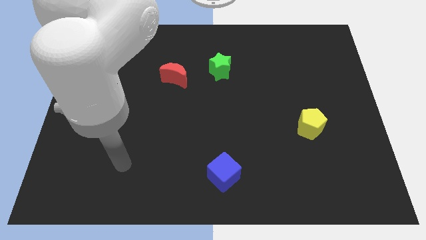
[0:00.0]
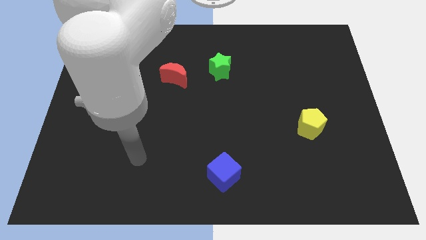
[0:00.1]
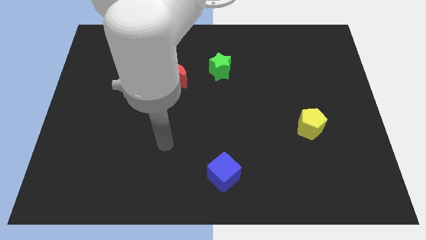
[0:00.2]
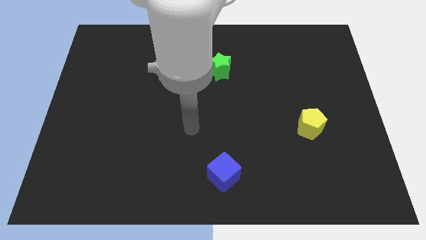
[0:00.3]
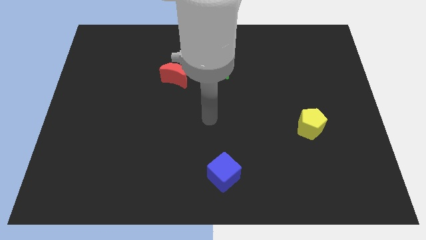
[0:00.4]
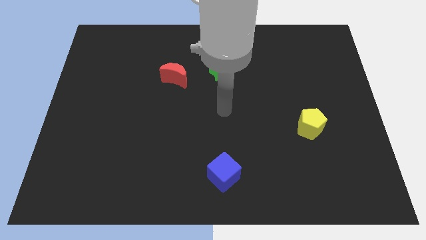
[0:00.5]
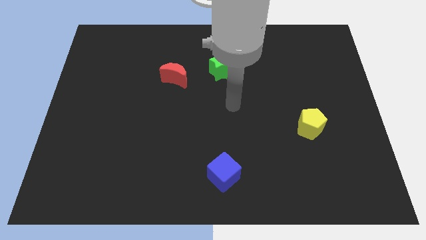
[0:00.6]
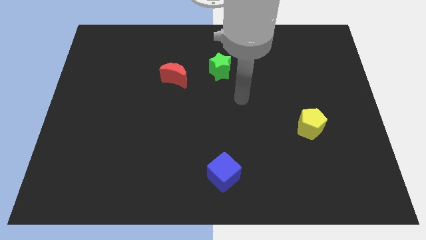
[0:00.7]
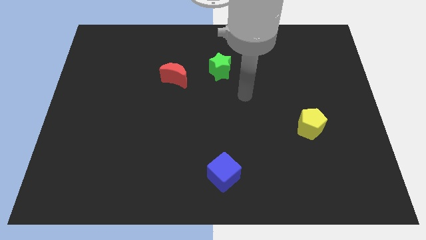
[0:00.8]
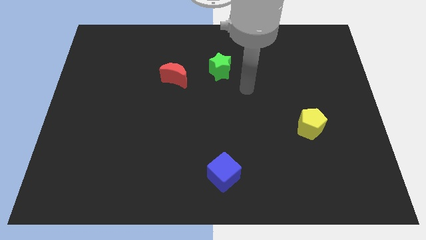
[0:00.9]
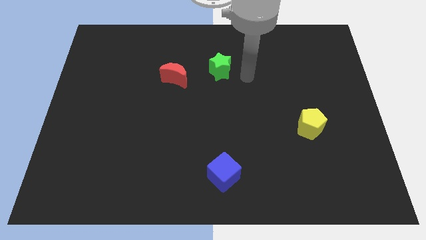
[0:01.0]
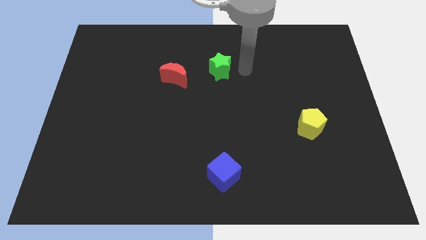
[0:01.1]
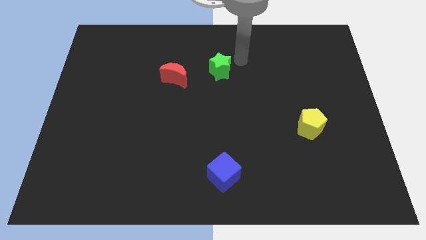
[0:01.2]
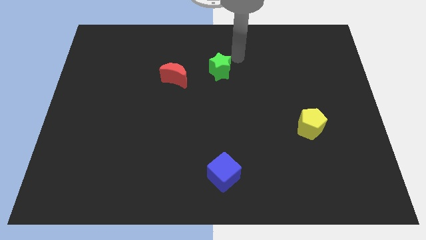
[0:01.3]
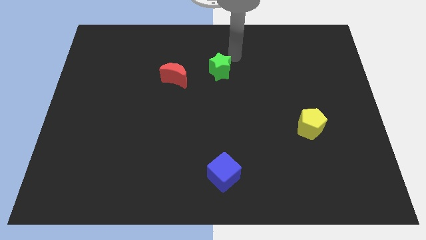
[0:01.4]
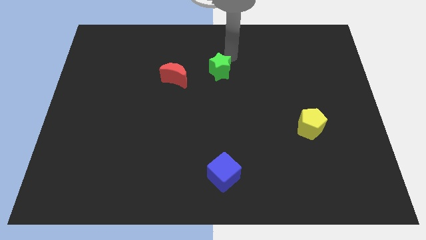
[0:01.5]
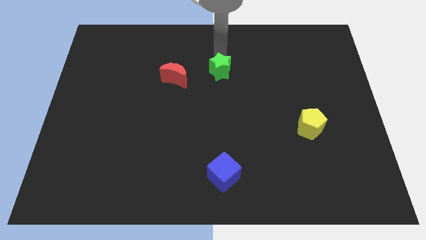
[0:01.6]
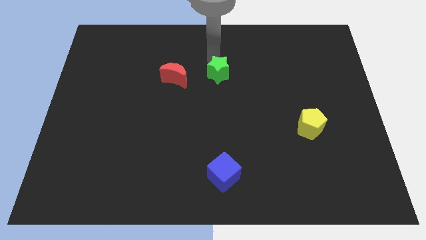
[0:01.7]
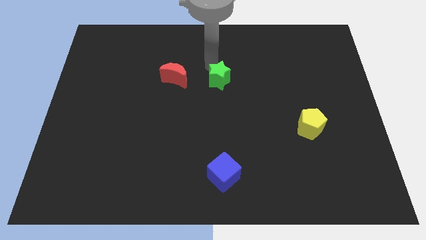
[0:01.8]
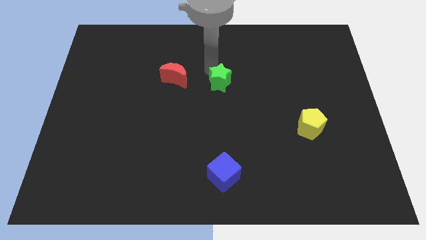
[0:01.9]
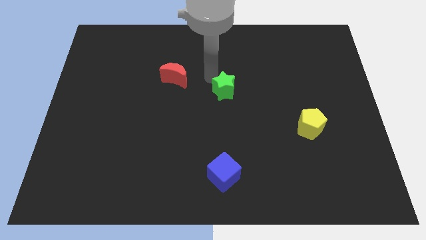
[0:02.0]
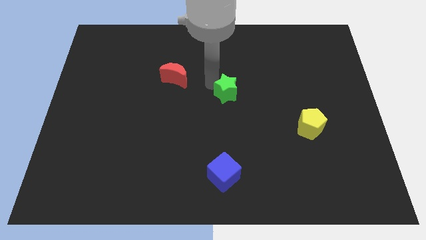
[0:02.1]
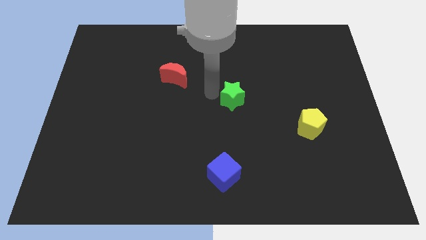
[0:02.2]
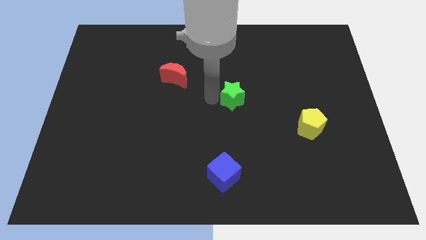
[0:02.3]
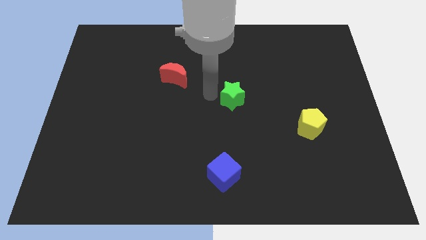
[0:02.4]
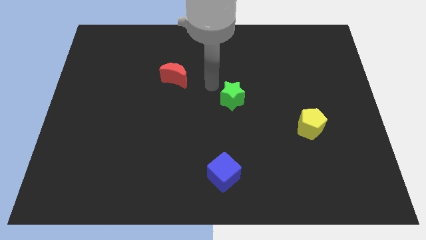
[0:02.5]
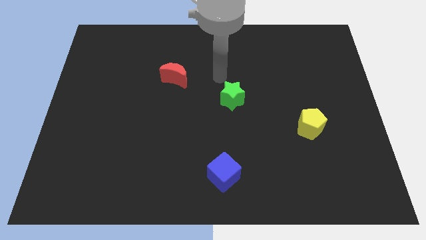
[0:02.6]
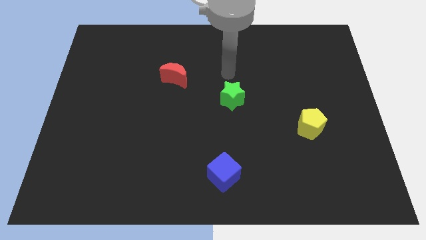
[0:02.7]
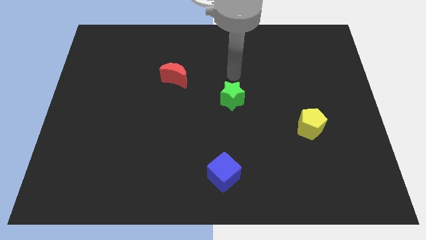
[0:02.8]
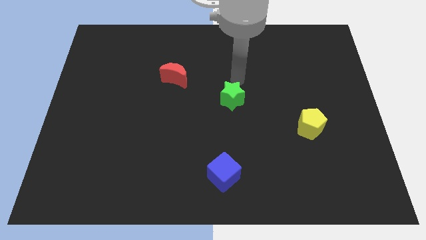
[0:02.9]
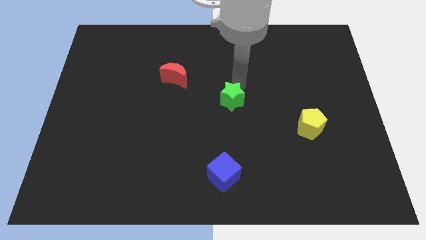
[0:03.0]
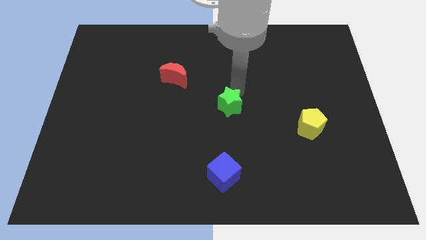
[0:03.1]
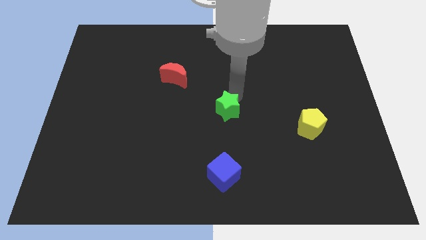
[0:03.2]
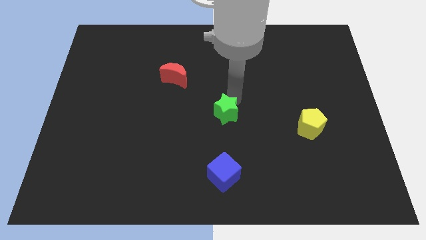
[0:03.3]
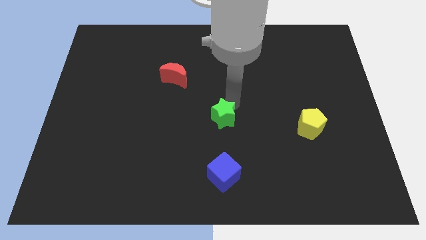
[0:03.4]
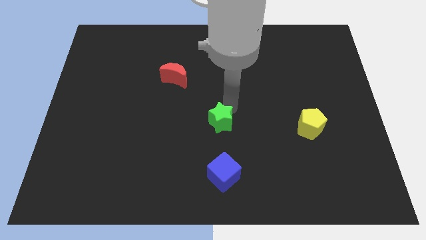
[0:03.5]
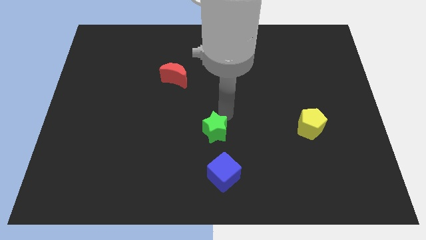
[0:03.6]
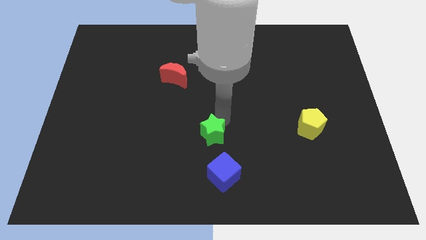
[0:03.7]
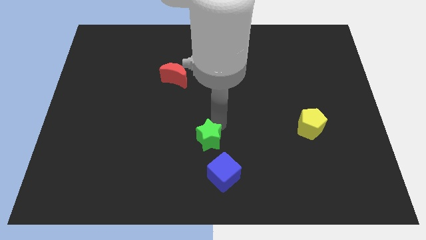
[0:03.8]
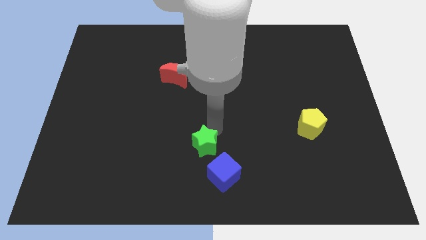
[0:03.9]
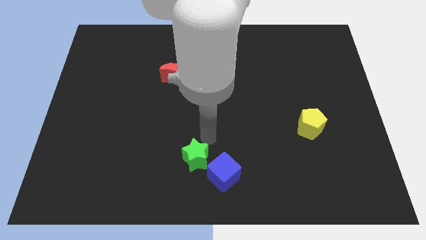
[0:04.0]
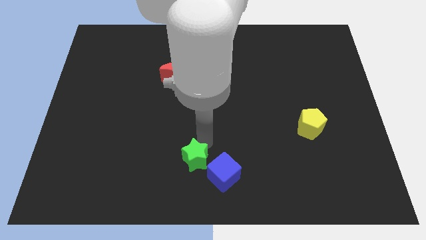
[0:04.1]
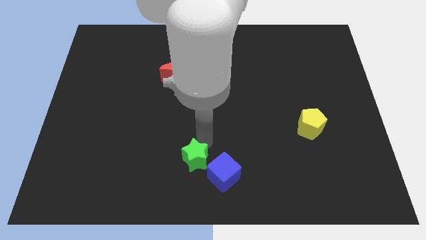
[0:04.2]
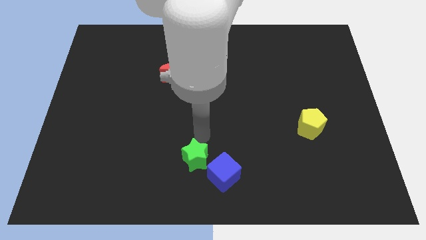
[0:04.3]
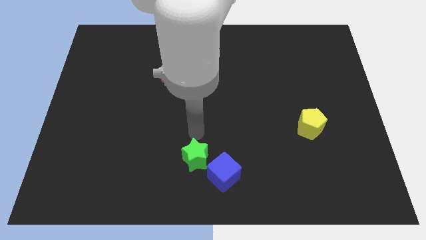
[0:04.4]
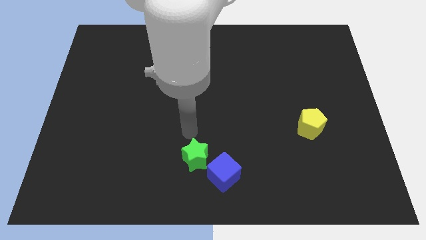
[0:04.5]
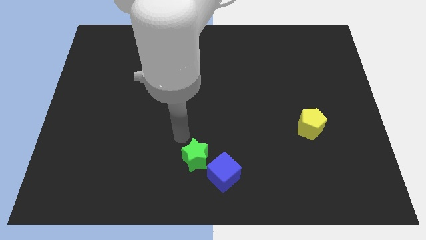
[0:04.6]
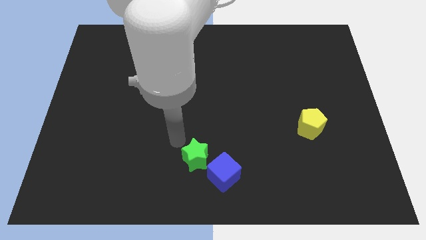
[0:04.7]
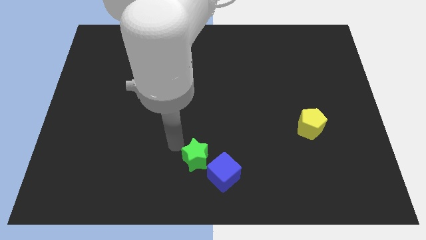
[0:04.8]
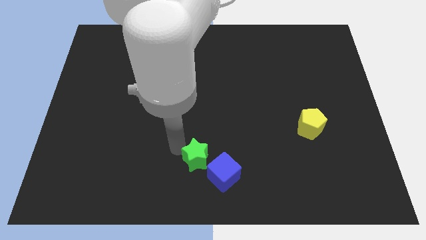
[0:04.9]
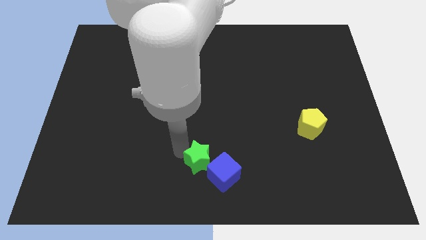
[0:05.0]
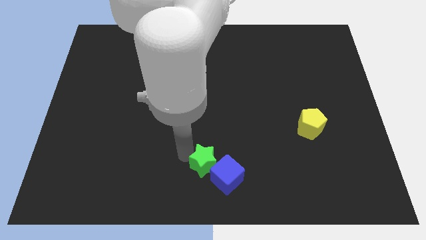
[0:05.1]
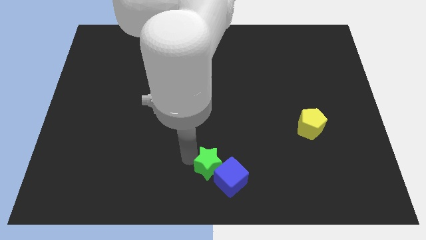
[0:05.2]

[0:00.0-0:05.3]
slide the star to the cube

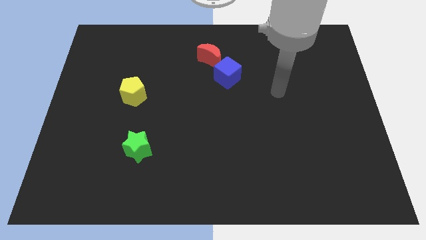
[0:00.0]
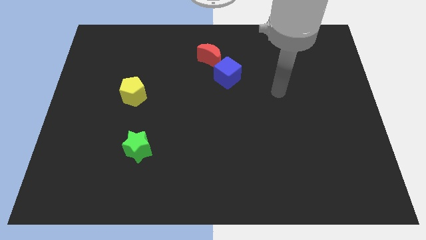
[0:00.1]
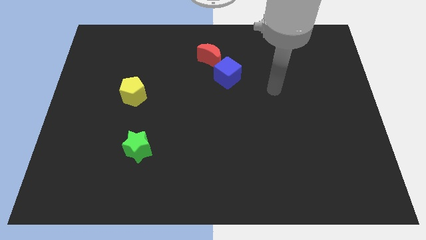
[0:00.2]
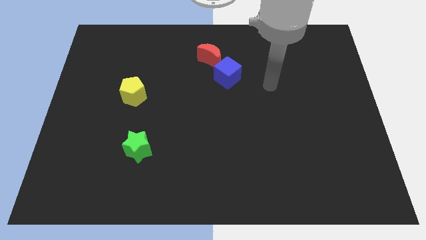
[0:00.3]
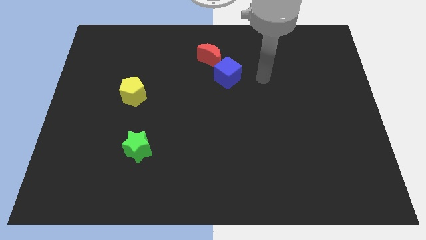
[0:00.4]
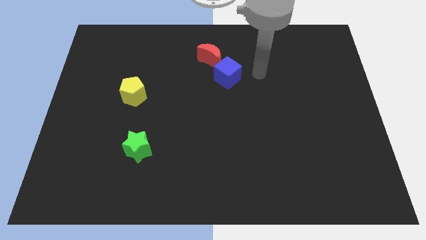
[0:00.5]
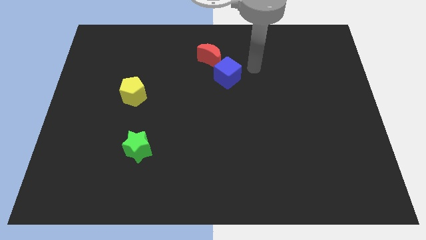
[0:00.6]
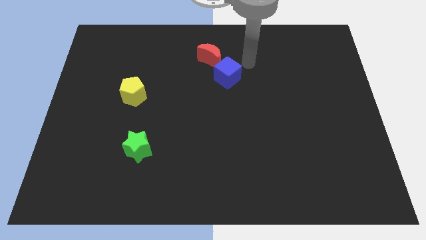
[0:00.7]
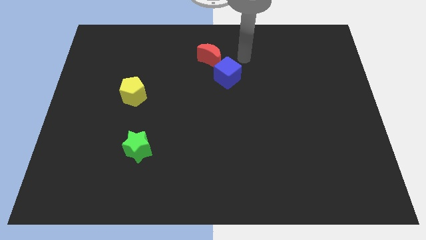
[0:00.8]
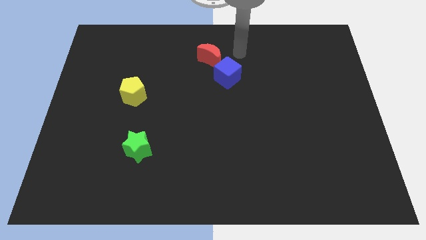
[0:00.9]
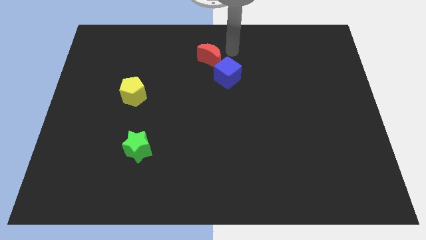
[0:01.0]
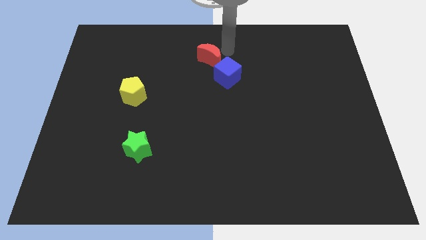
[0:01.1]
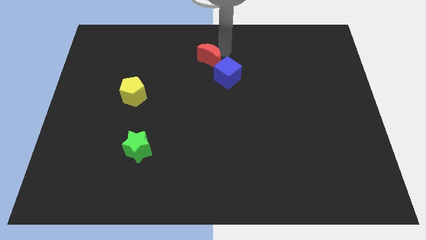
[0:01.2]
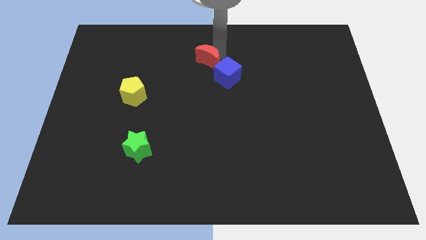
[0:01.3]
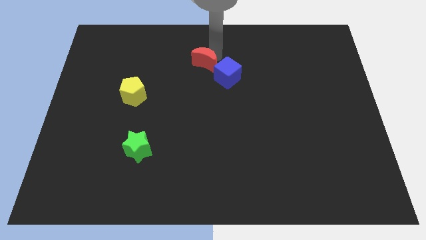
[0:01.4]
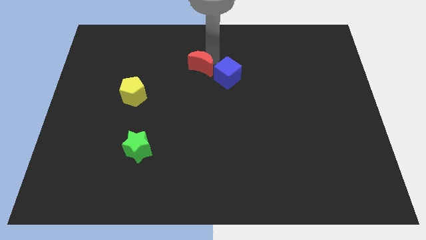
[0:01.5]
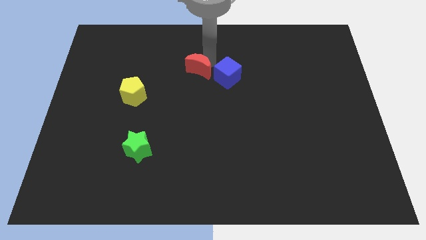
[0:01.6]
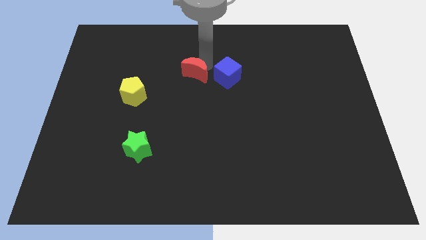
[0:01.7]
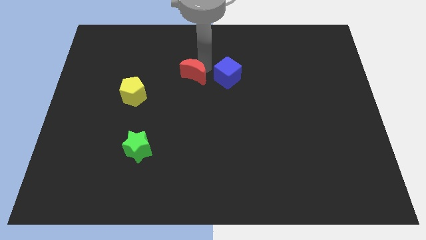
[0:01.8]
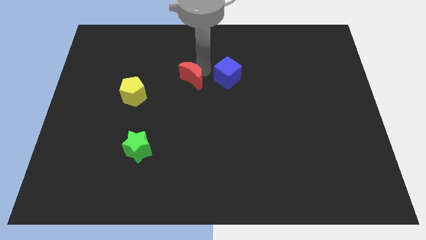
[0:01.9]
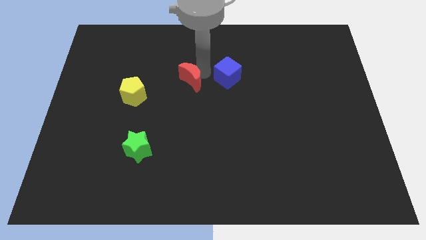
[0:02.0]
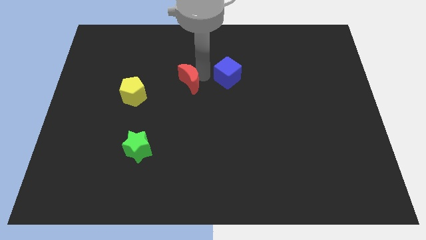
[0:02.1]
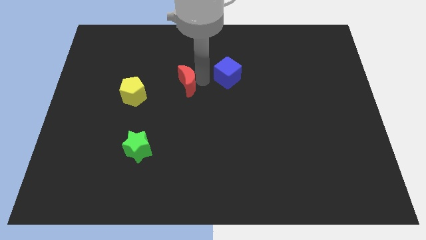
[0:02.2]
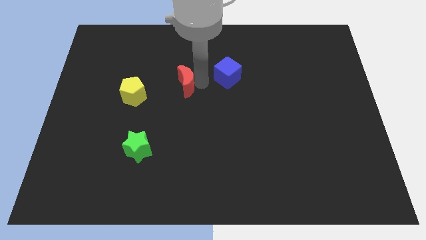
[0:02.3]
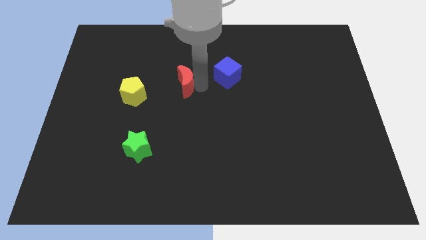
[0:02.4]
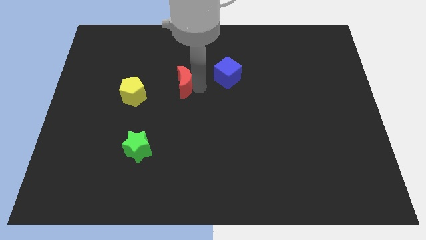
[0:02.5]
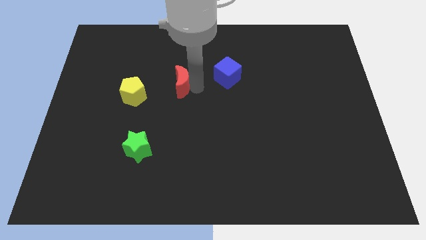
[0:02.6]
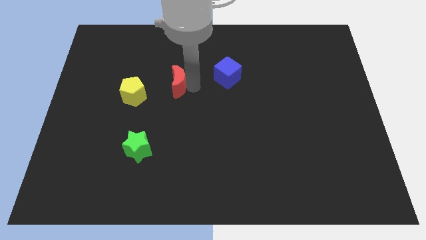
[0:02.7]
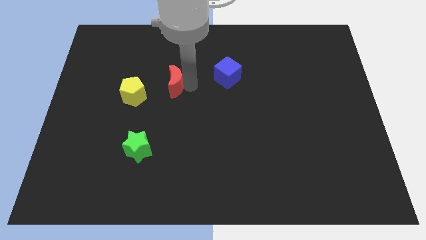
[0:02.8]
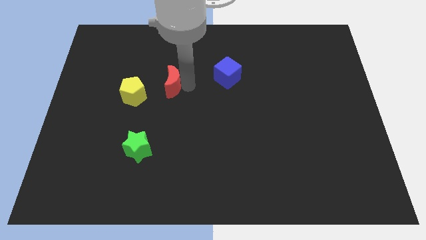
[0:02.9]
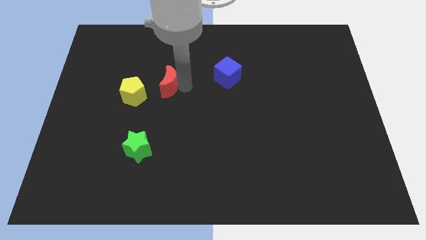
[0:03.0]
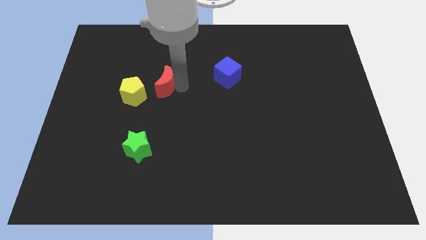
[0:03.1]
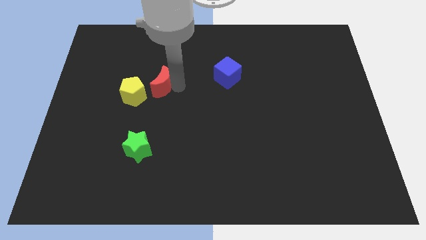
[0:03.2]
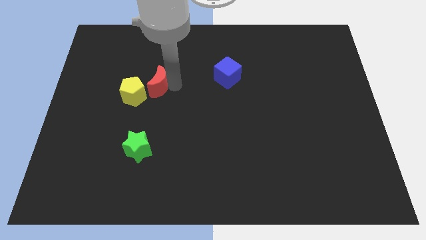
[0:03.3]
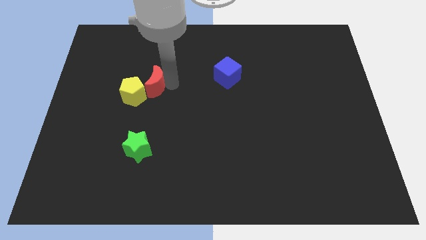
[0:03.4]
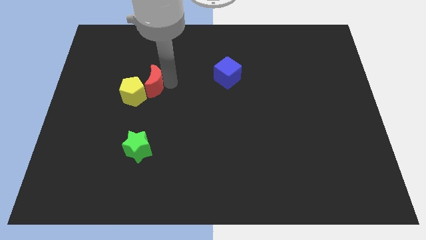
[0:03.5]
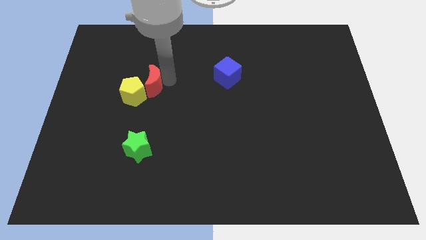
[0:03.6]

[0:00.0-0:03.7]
put the red block close to the yellow pentagon
